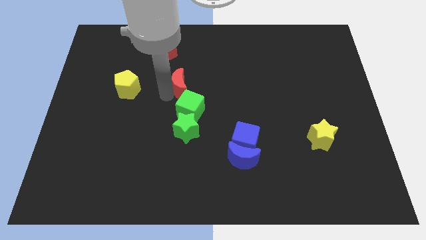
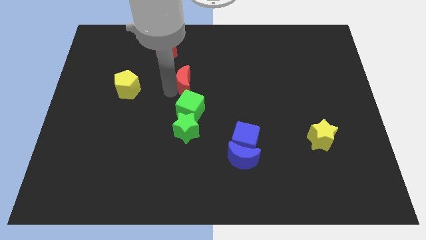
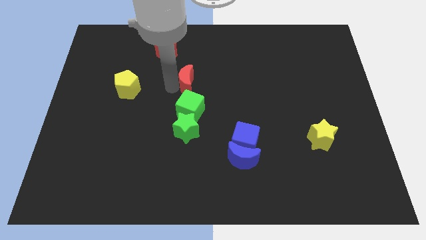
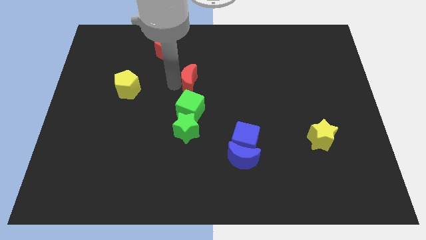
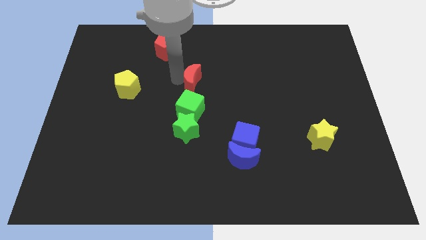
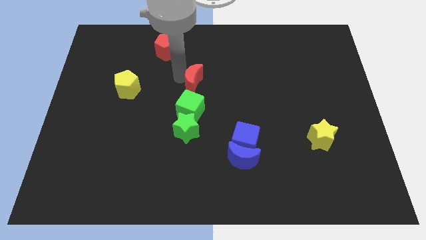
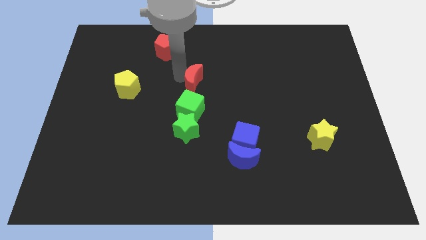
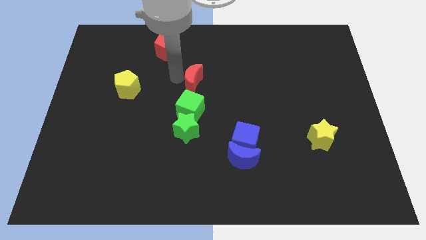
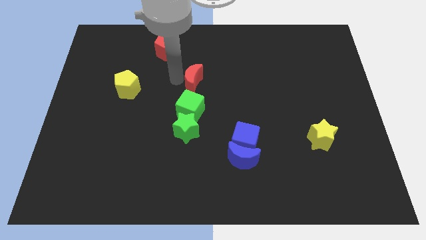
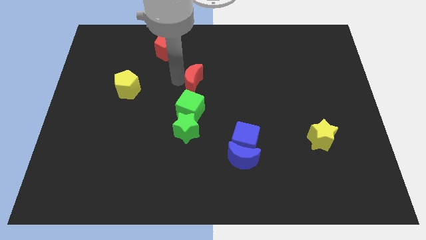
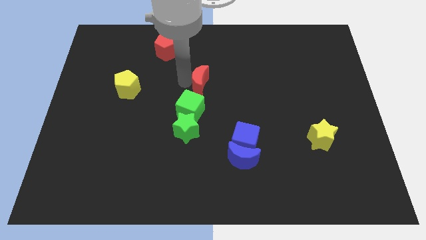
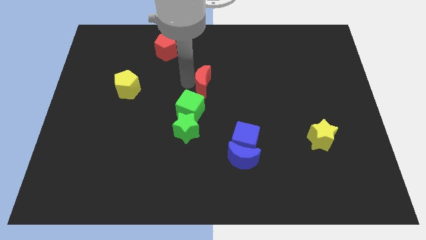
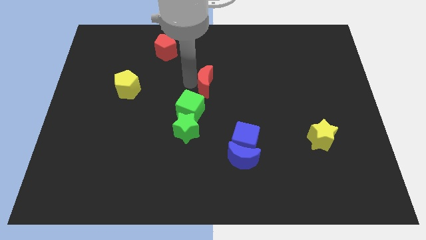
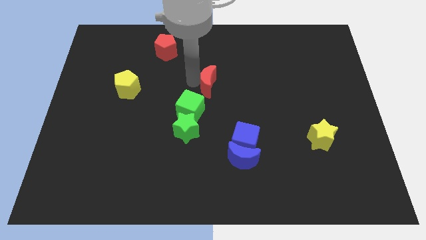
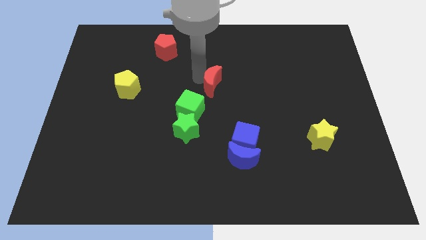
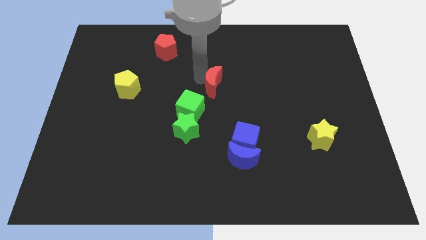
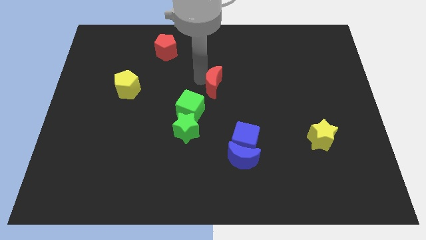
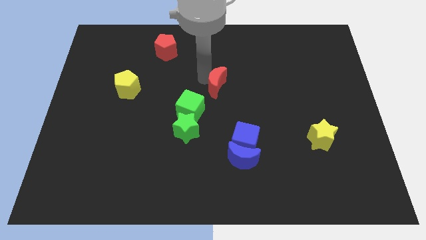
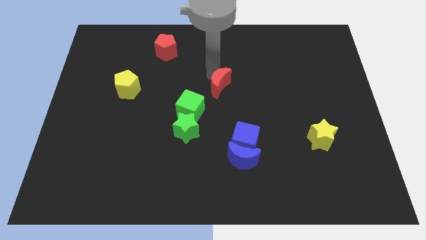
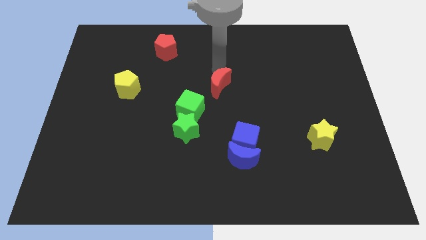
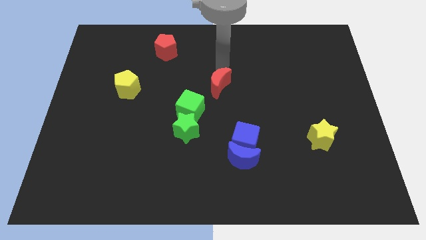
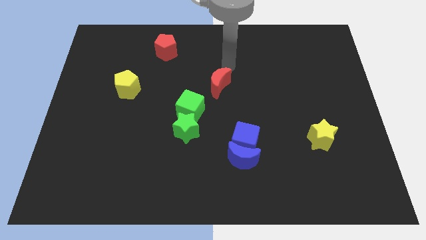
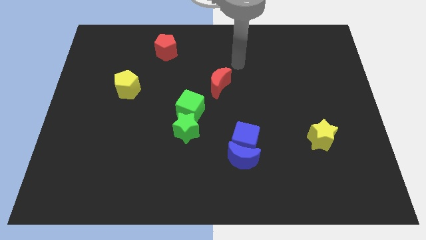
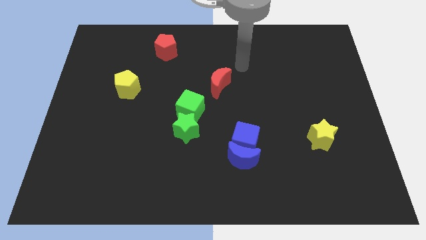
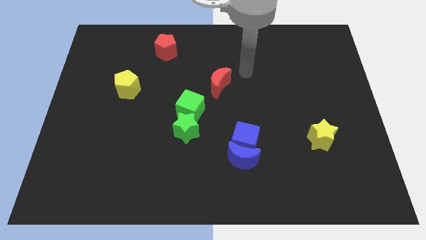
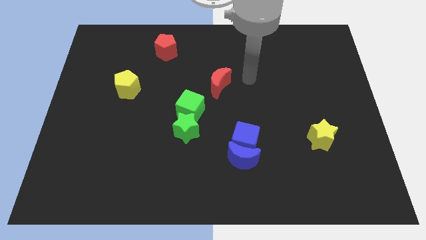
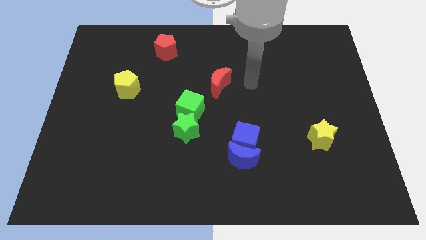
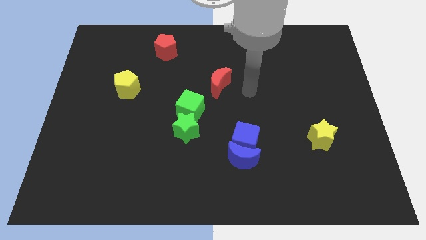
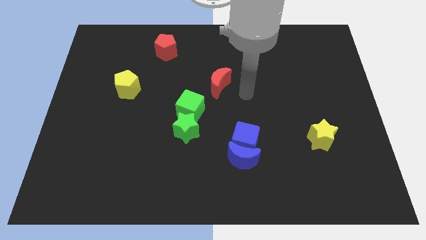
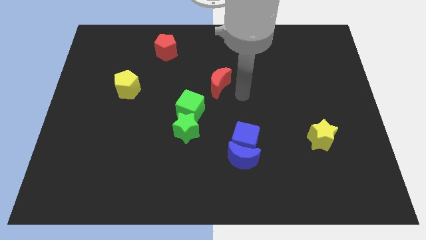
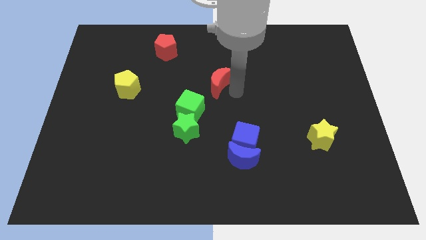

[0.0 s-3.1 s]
drag the red crescent to the center of the board

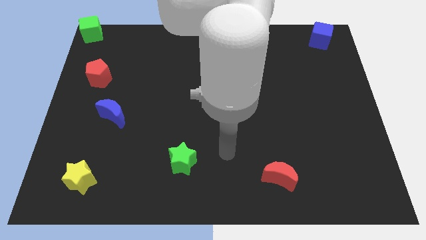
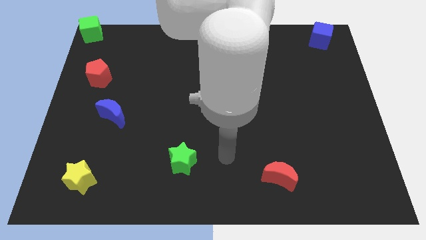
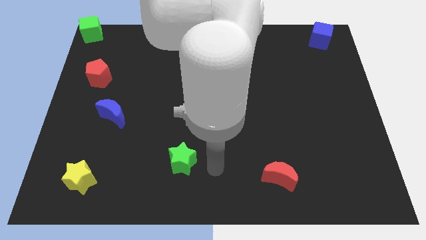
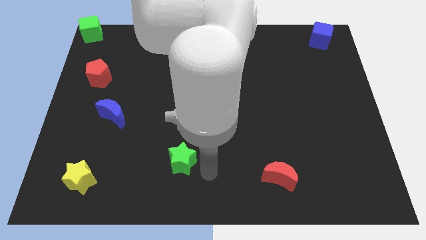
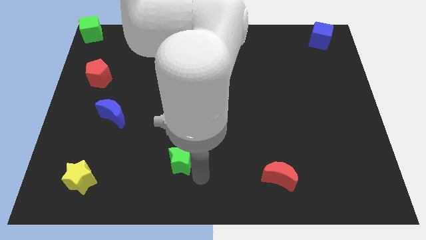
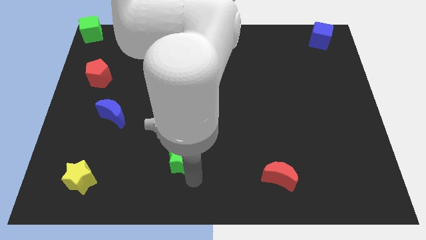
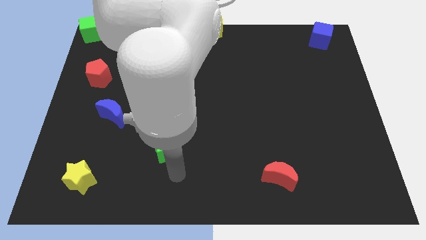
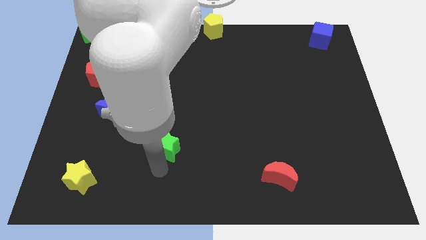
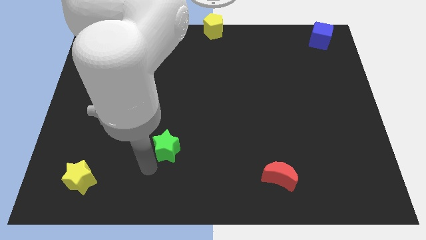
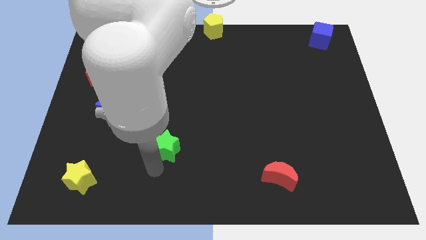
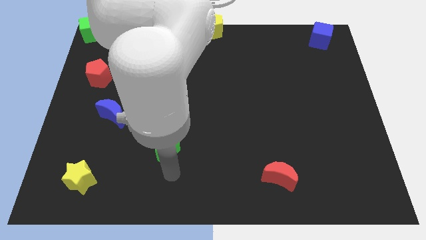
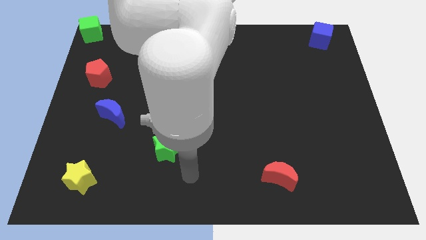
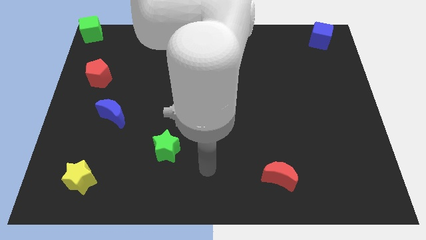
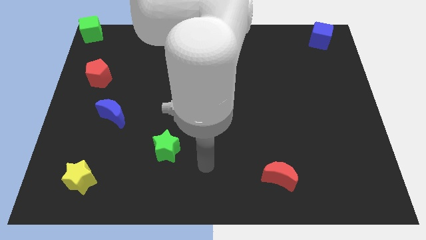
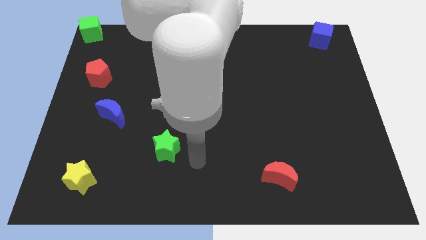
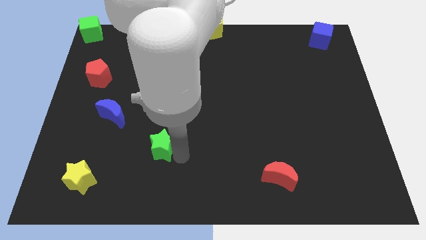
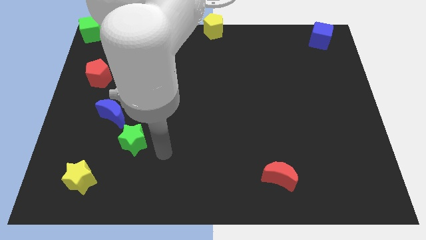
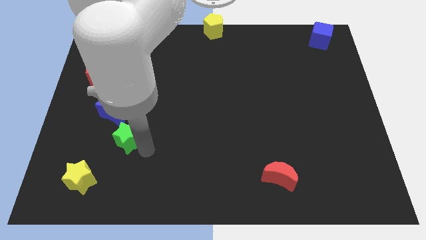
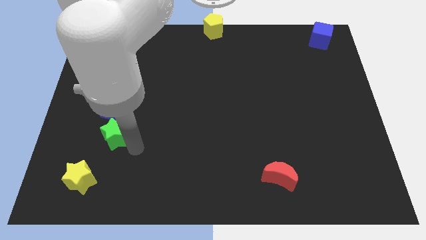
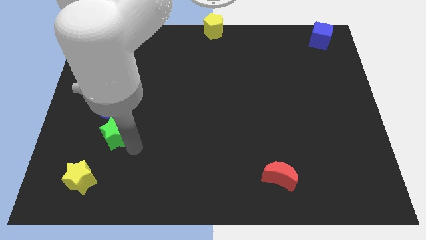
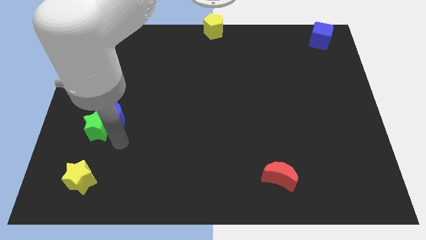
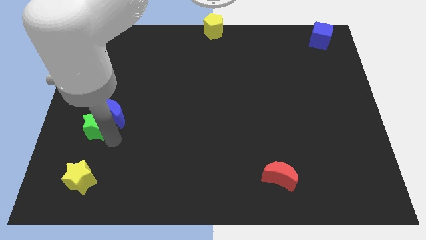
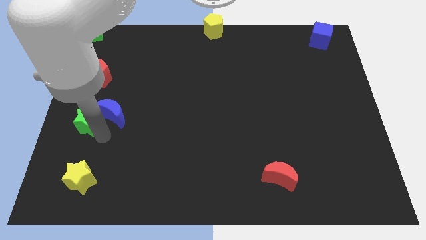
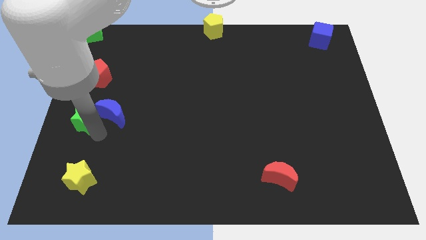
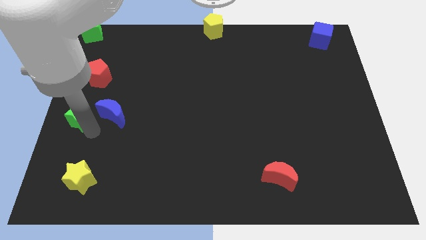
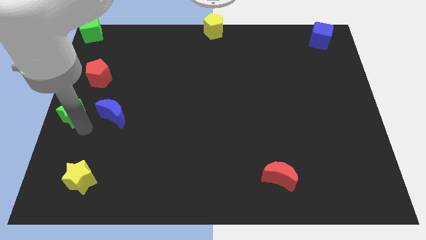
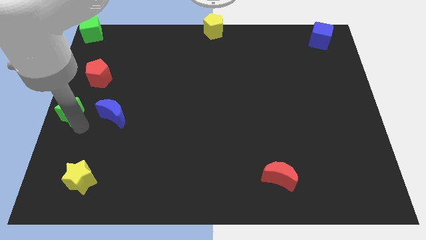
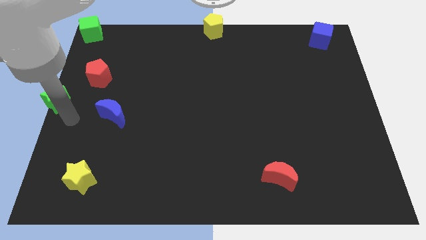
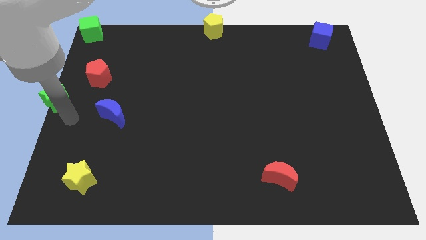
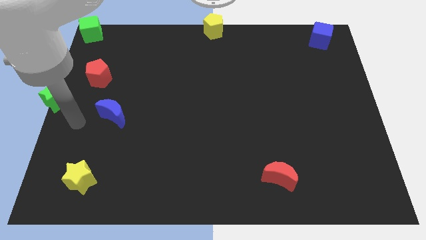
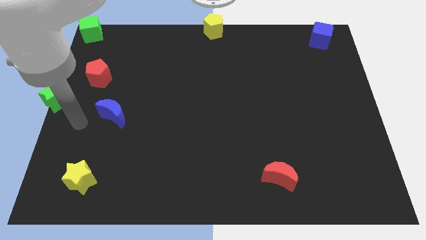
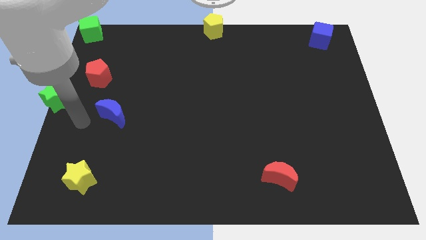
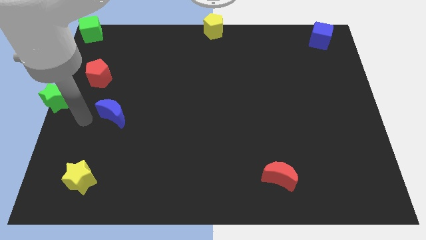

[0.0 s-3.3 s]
move the green star to the center left of the board

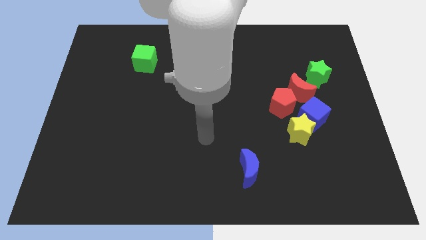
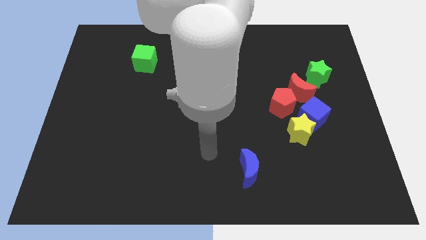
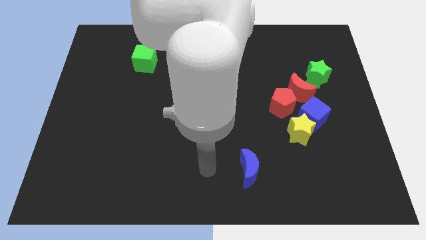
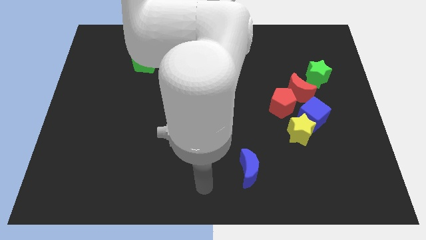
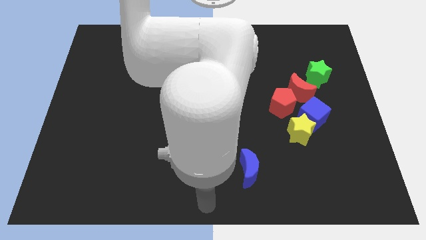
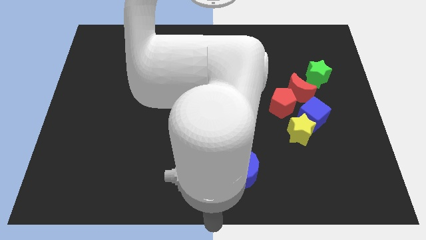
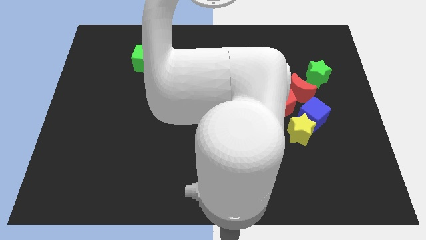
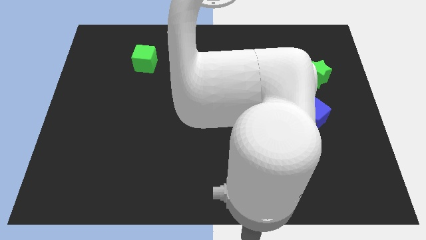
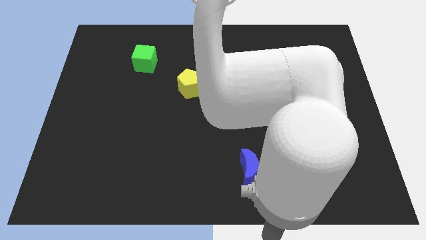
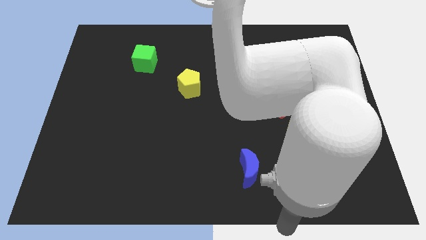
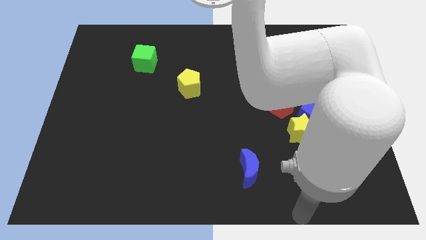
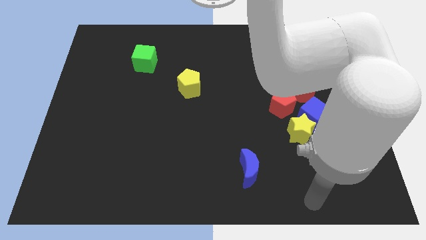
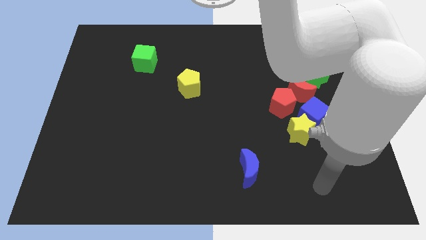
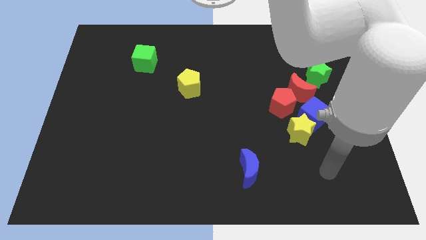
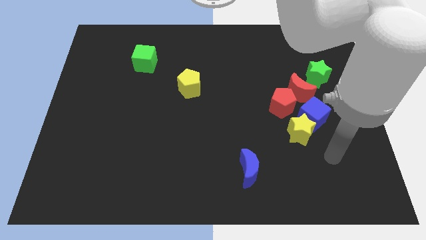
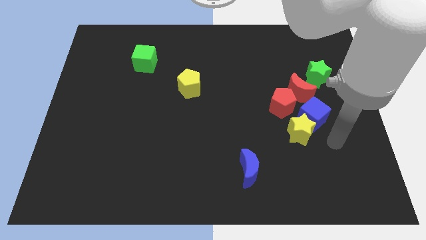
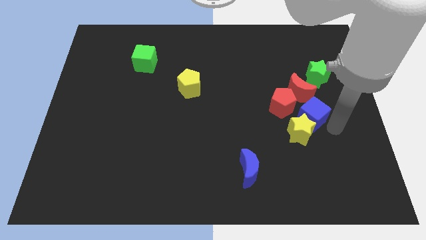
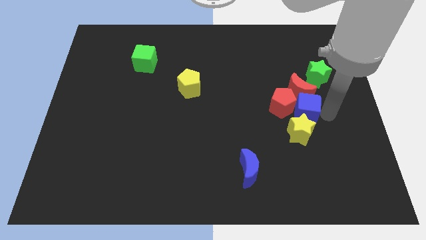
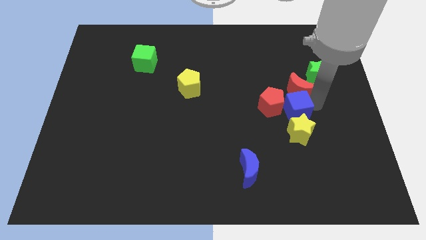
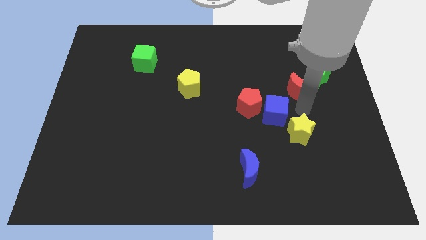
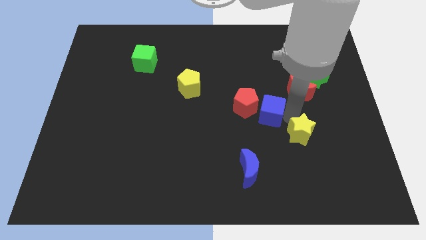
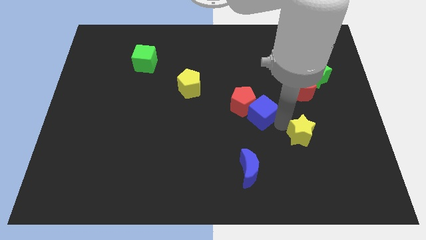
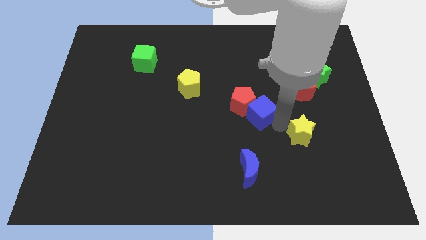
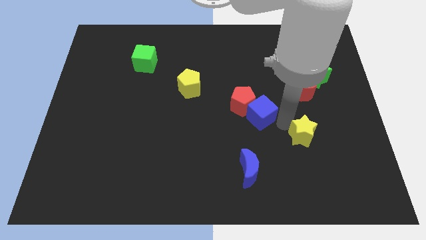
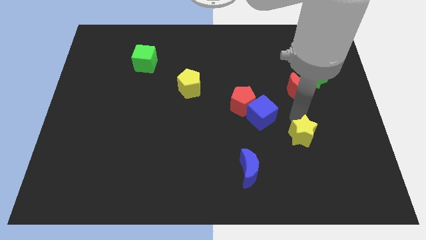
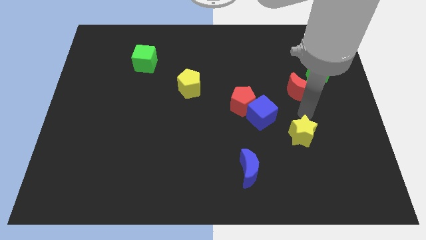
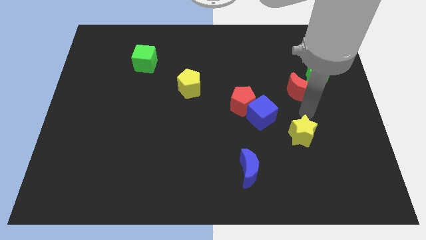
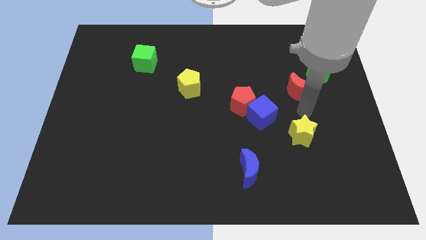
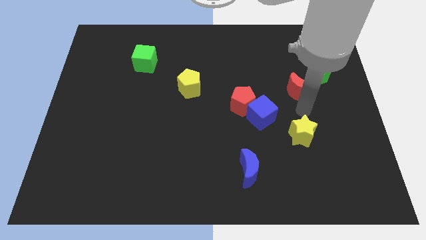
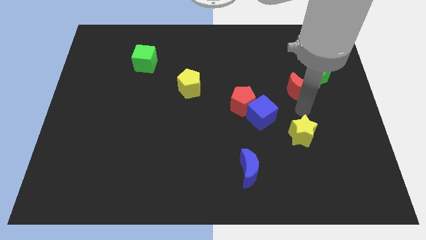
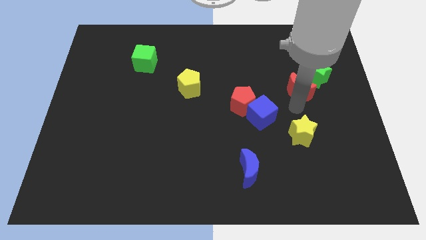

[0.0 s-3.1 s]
move your arm and separate the blue cube with red pentagon
